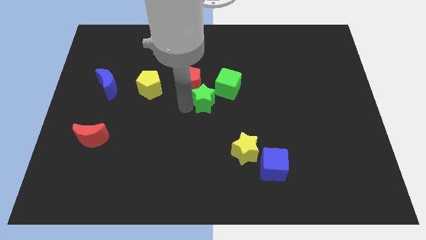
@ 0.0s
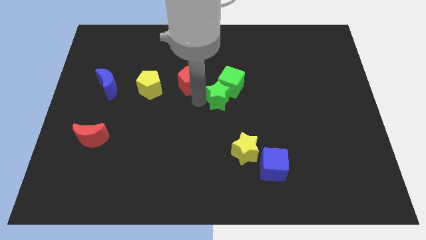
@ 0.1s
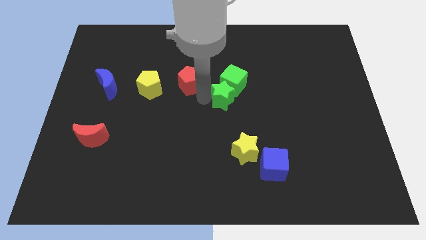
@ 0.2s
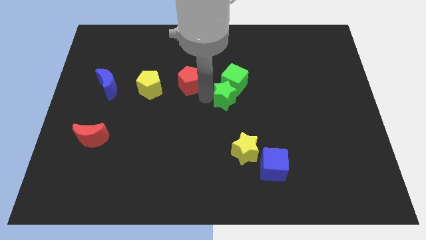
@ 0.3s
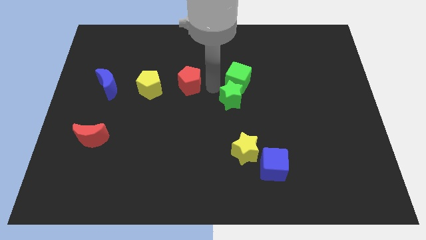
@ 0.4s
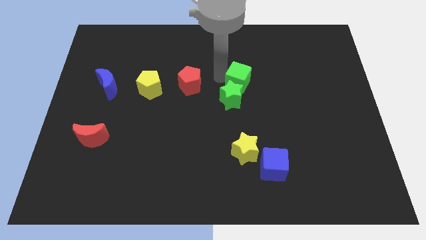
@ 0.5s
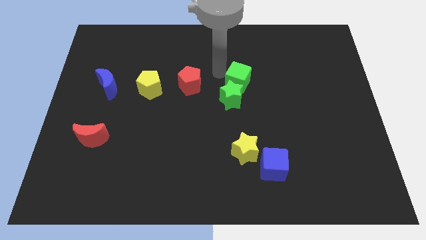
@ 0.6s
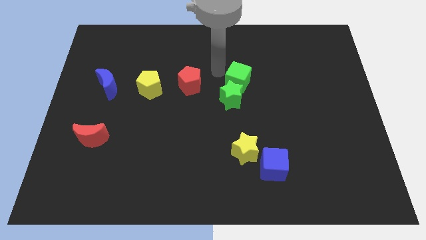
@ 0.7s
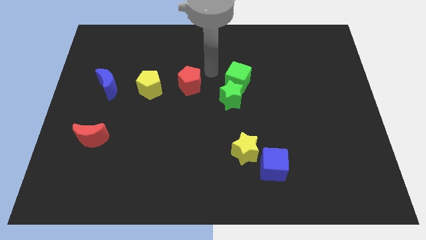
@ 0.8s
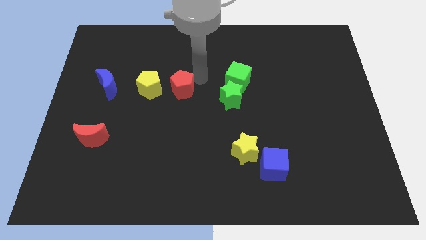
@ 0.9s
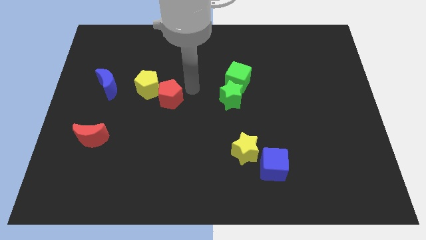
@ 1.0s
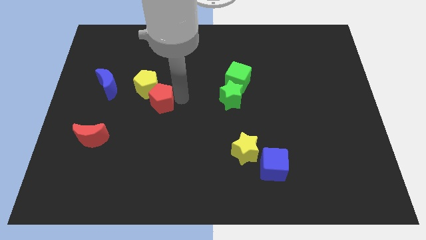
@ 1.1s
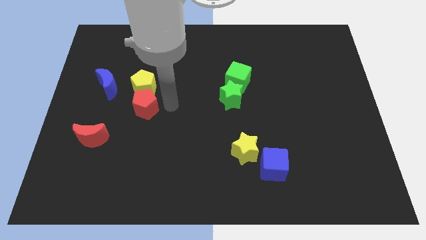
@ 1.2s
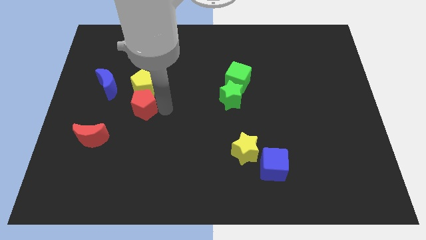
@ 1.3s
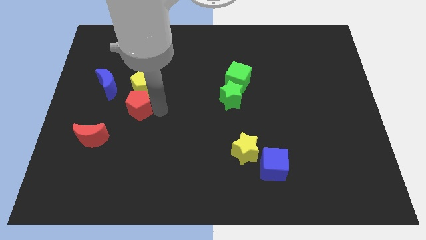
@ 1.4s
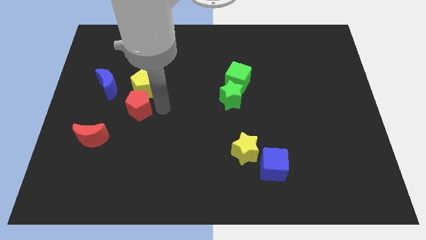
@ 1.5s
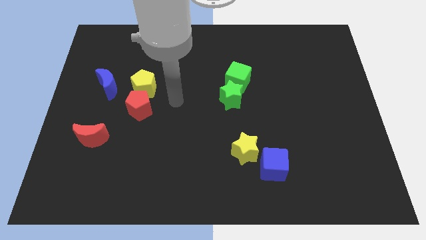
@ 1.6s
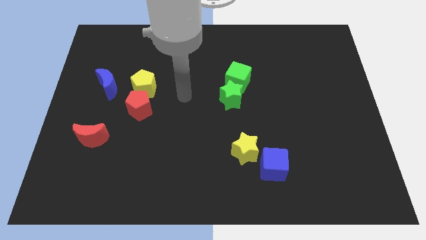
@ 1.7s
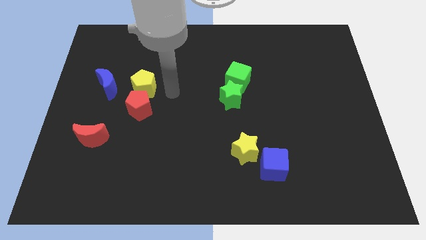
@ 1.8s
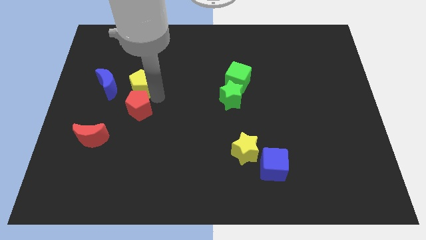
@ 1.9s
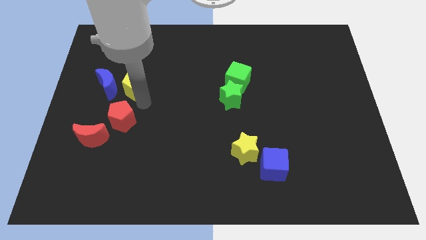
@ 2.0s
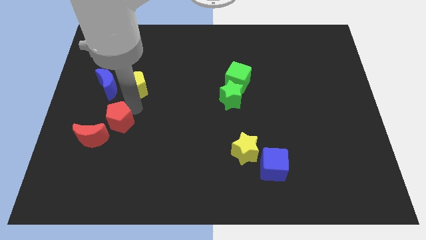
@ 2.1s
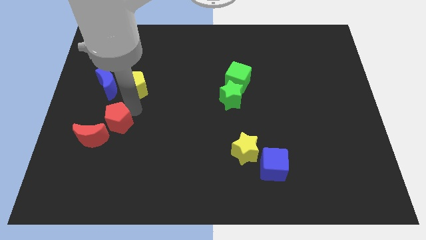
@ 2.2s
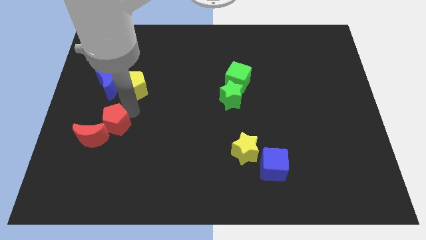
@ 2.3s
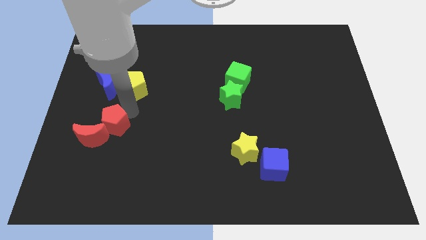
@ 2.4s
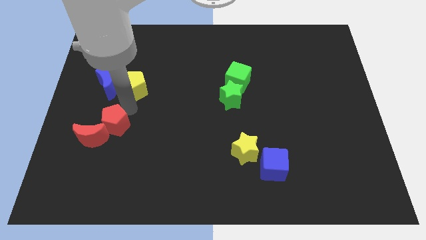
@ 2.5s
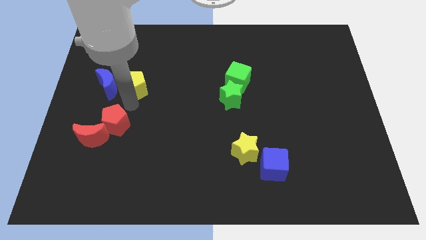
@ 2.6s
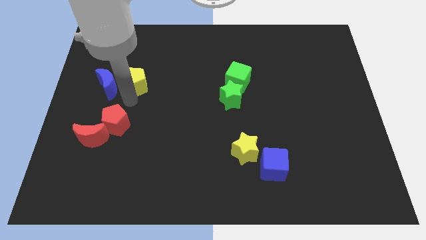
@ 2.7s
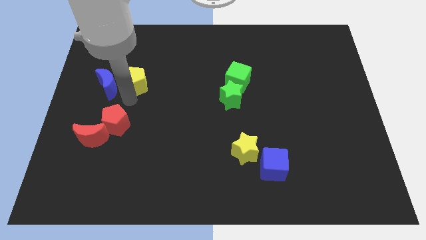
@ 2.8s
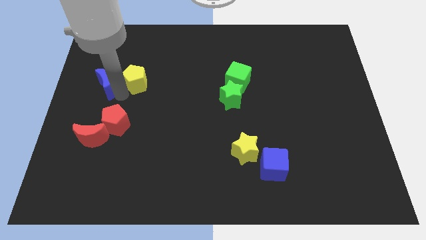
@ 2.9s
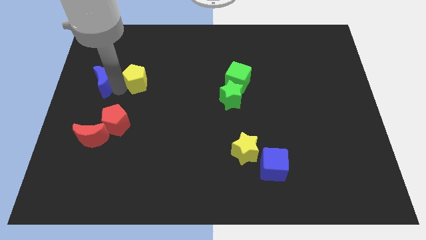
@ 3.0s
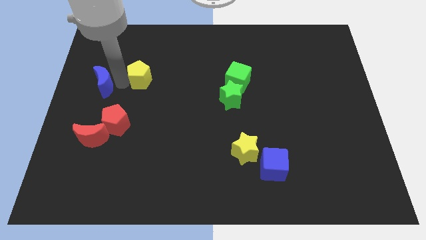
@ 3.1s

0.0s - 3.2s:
place the red pentagon vertically below the yellow star

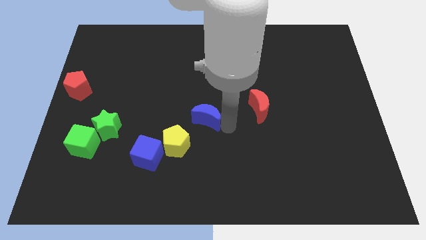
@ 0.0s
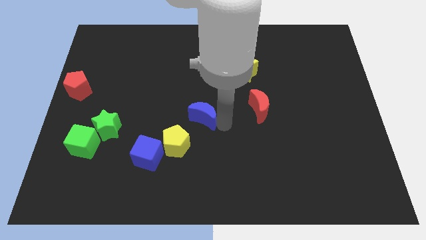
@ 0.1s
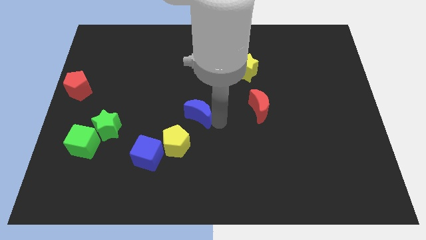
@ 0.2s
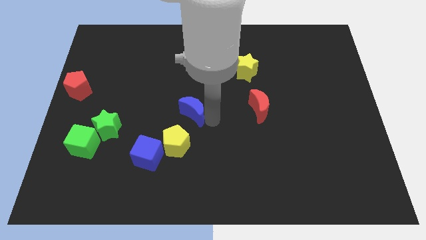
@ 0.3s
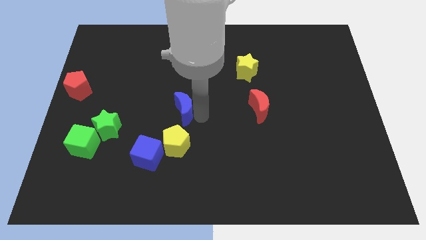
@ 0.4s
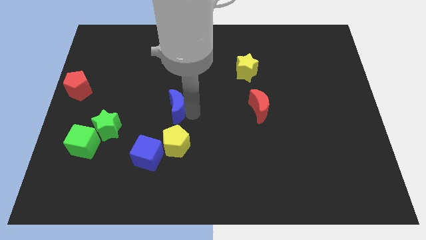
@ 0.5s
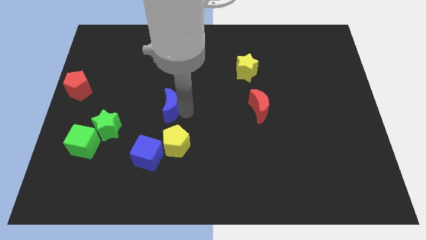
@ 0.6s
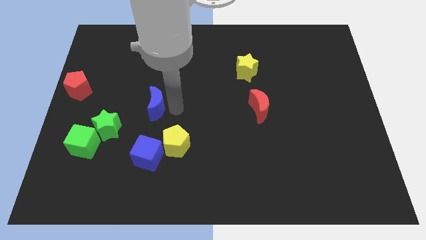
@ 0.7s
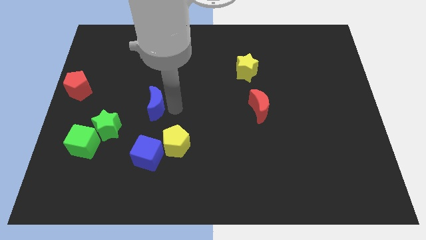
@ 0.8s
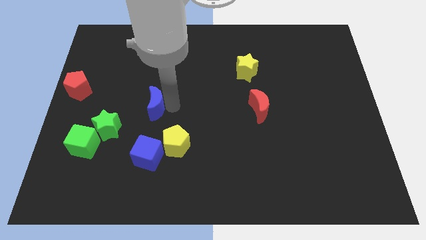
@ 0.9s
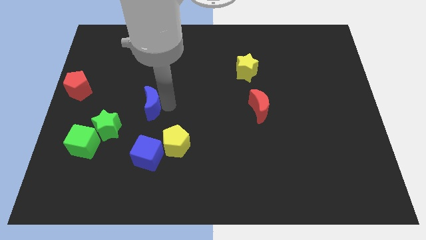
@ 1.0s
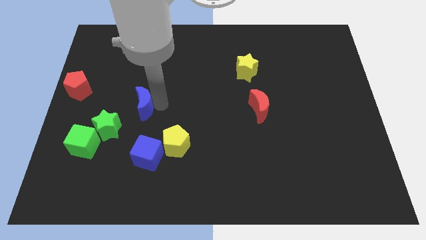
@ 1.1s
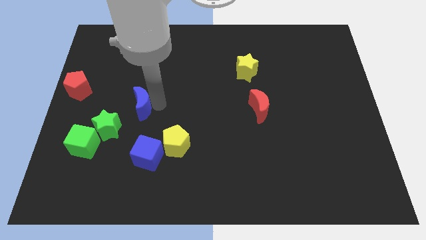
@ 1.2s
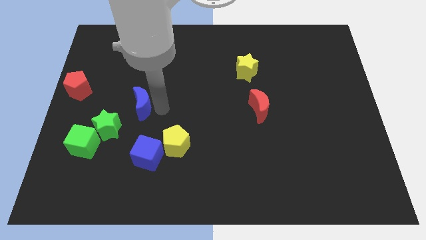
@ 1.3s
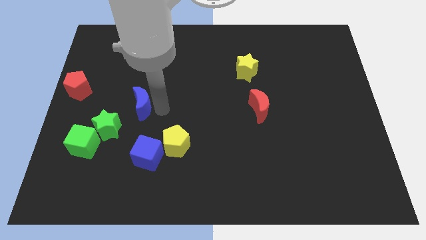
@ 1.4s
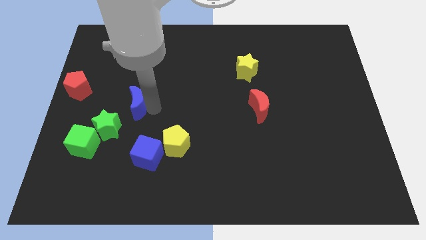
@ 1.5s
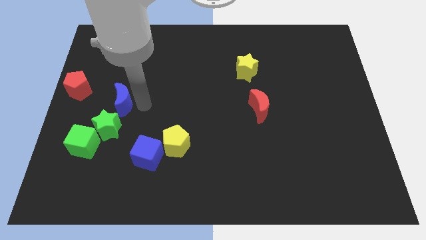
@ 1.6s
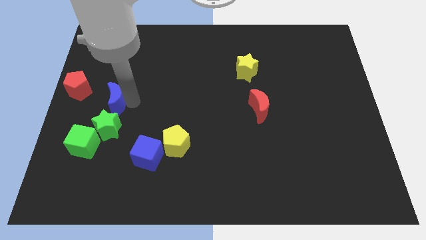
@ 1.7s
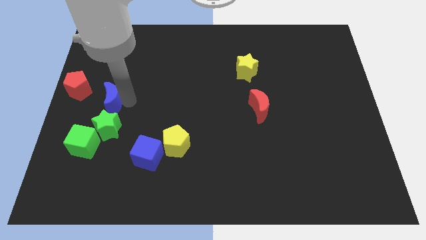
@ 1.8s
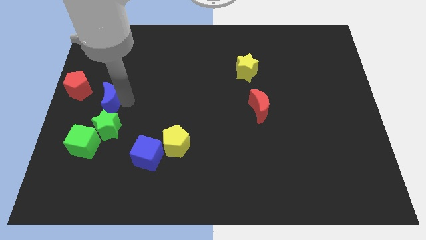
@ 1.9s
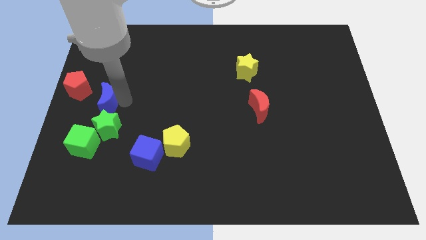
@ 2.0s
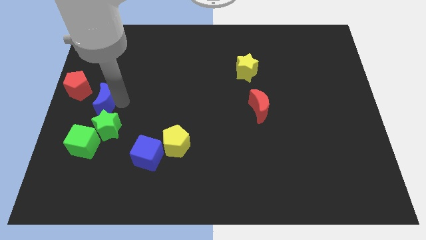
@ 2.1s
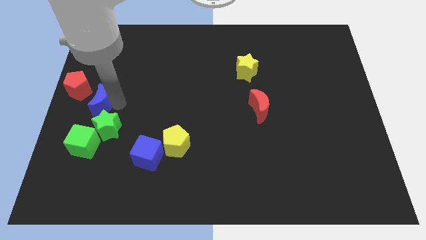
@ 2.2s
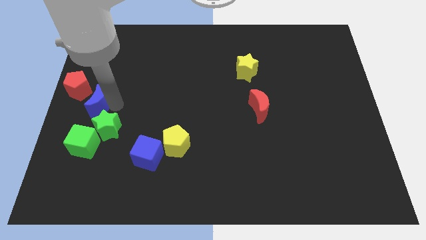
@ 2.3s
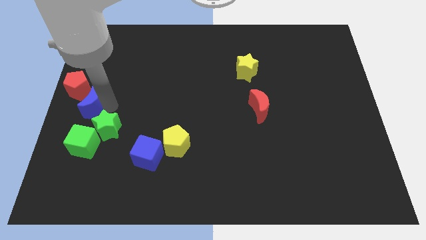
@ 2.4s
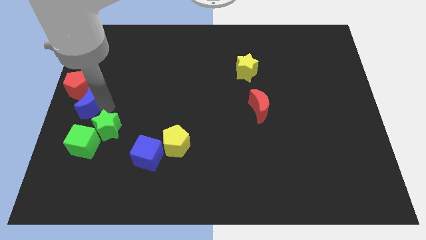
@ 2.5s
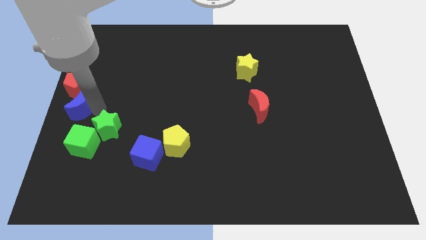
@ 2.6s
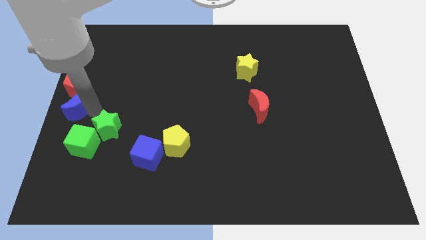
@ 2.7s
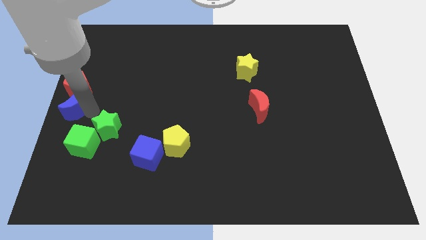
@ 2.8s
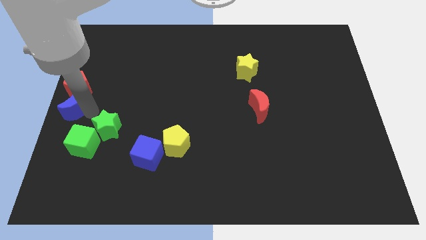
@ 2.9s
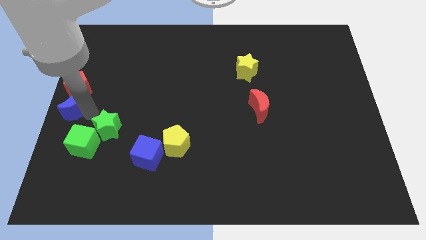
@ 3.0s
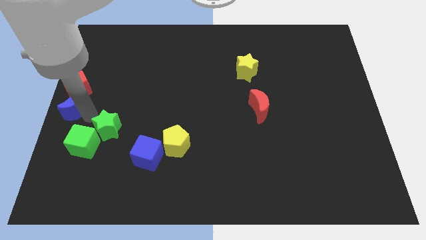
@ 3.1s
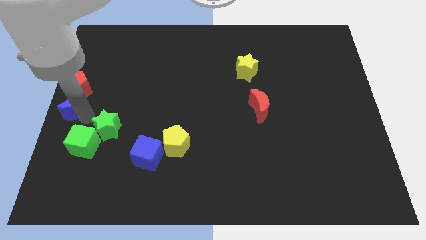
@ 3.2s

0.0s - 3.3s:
push the blue moon close to the red pentagon

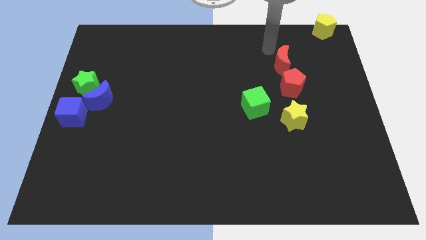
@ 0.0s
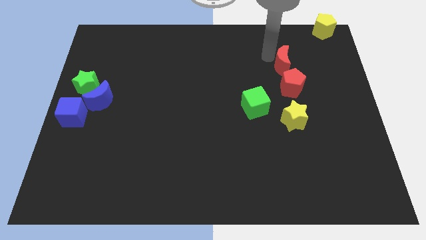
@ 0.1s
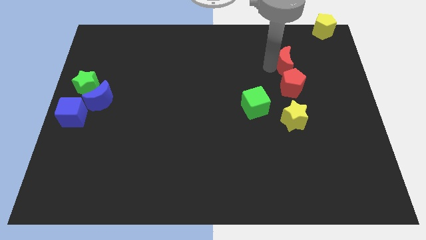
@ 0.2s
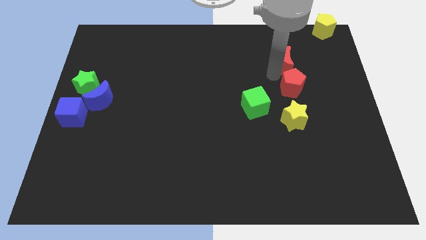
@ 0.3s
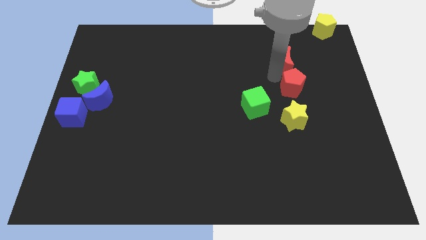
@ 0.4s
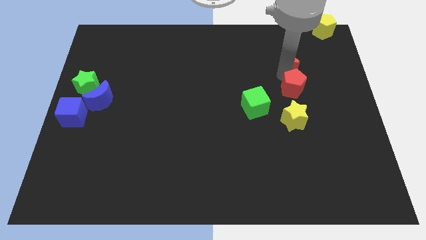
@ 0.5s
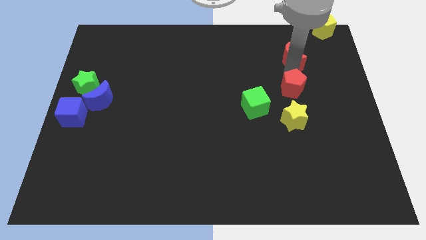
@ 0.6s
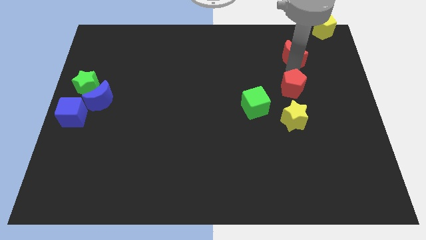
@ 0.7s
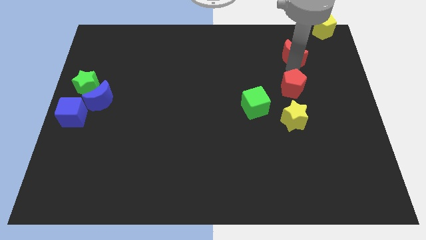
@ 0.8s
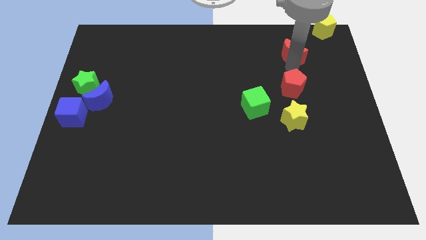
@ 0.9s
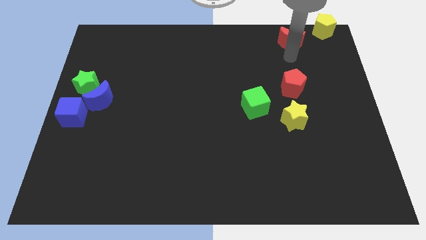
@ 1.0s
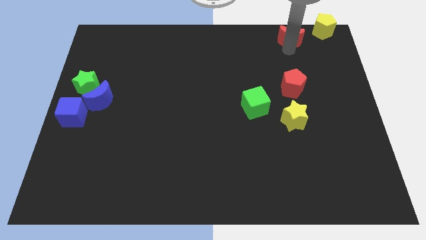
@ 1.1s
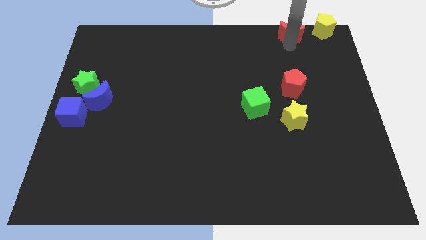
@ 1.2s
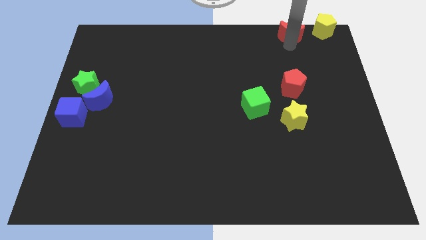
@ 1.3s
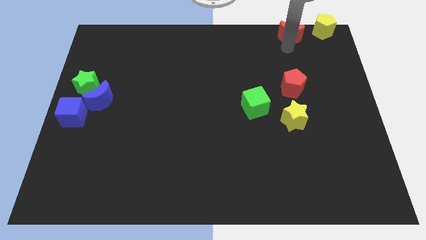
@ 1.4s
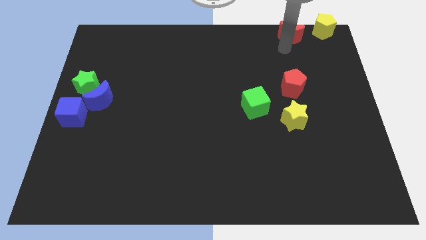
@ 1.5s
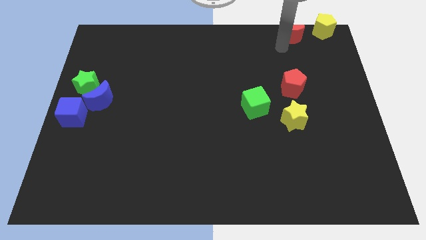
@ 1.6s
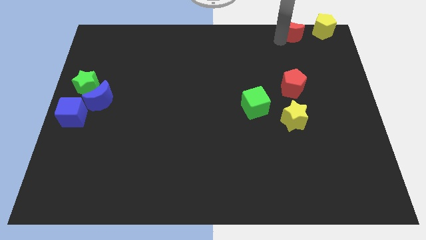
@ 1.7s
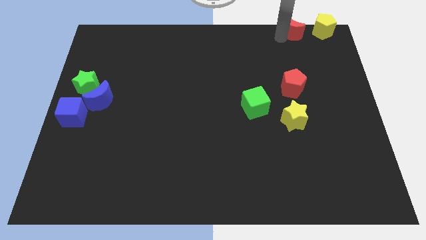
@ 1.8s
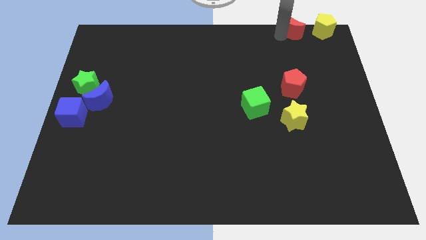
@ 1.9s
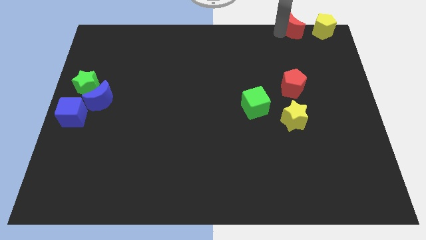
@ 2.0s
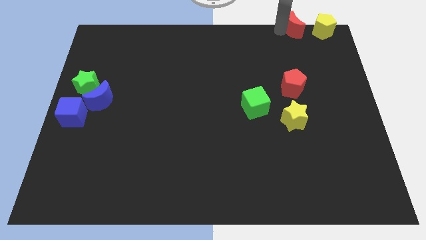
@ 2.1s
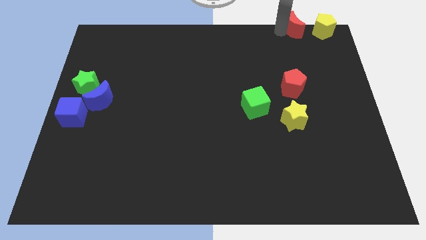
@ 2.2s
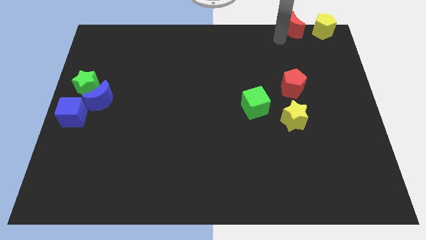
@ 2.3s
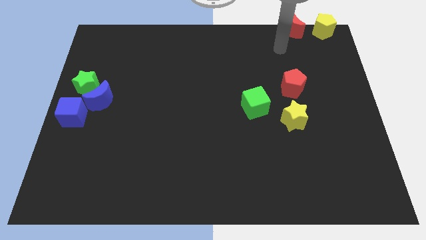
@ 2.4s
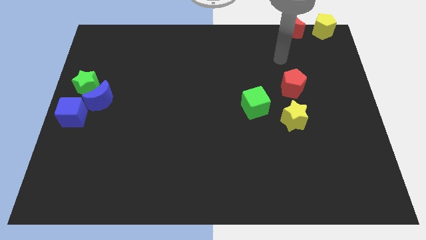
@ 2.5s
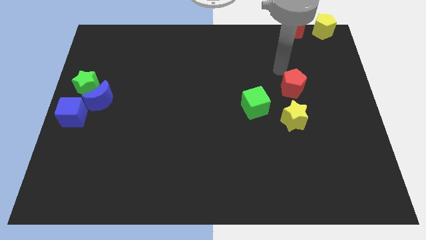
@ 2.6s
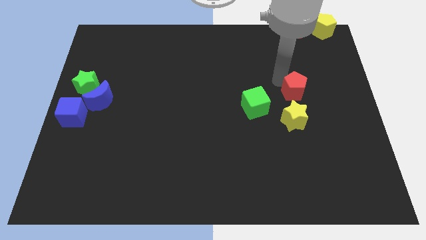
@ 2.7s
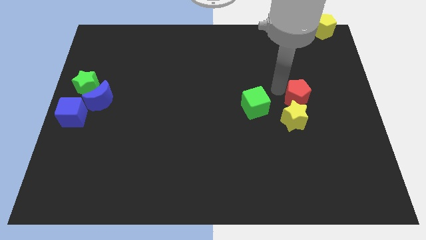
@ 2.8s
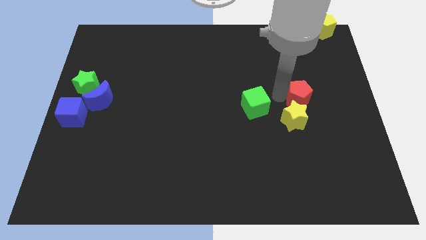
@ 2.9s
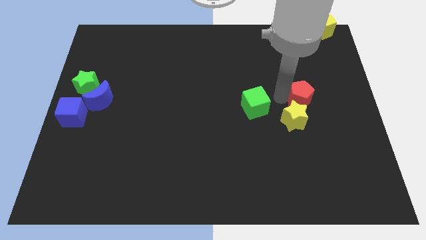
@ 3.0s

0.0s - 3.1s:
move the red crescent on the left side of the yellow pentagon
